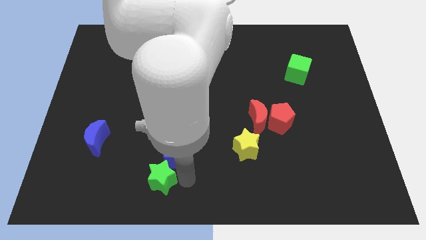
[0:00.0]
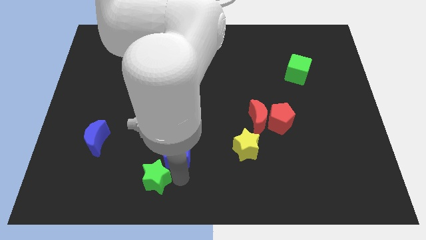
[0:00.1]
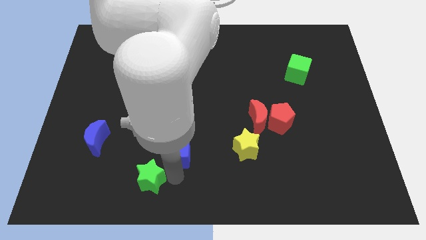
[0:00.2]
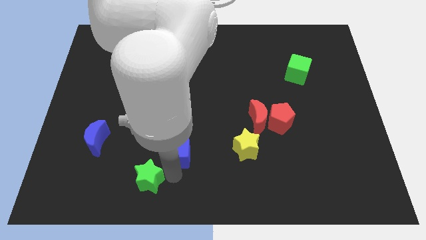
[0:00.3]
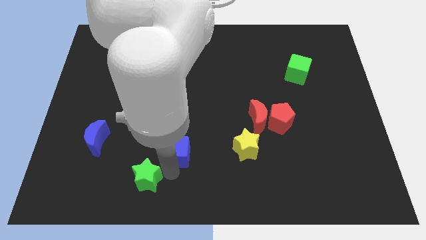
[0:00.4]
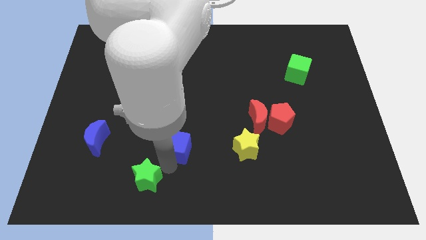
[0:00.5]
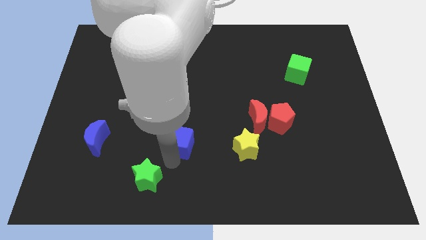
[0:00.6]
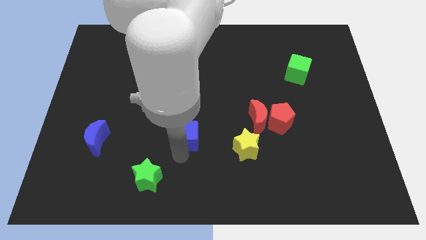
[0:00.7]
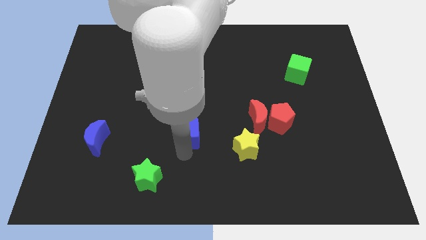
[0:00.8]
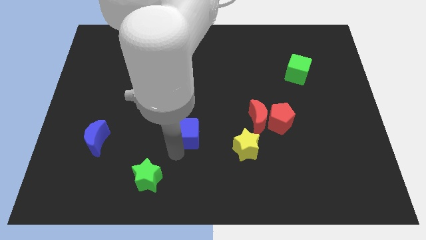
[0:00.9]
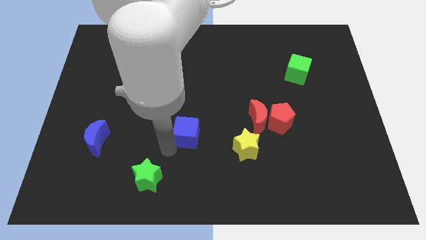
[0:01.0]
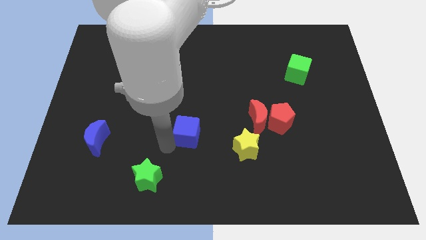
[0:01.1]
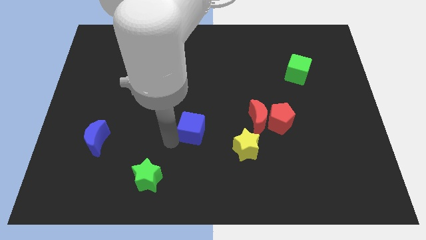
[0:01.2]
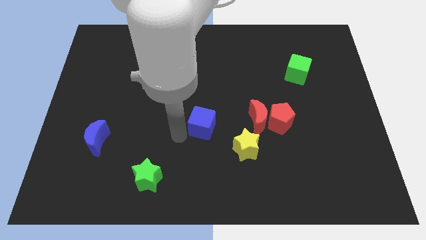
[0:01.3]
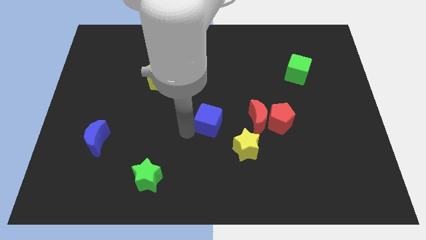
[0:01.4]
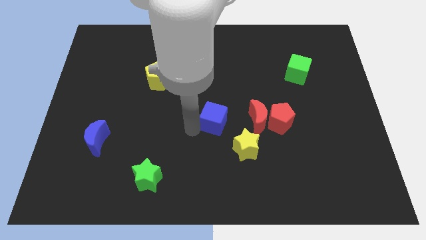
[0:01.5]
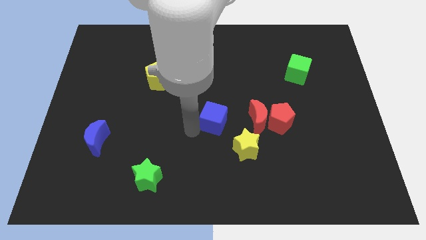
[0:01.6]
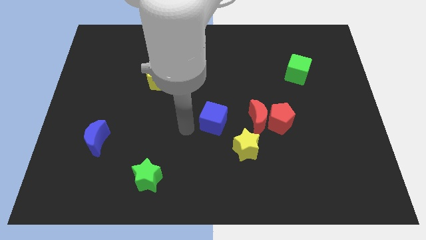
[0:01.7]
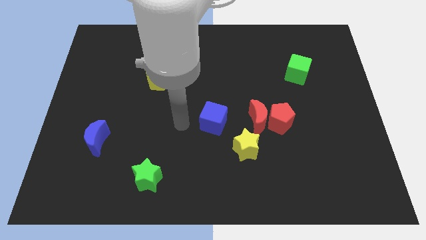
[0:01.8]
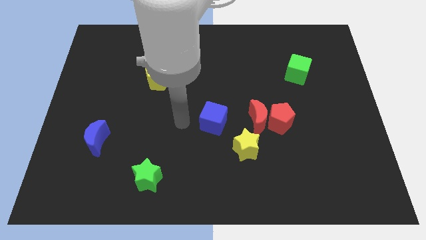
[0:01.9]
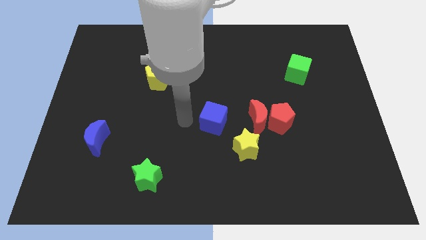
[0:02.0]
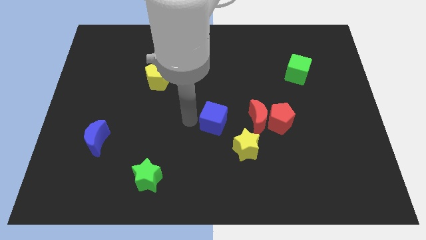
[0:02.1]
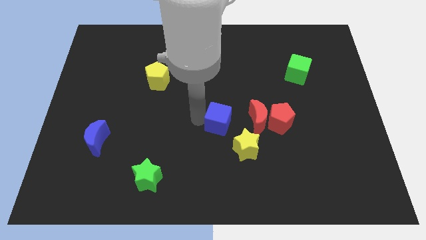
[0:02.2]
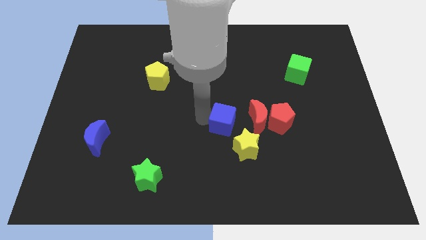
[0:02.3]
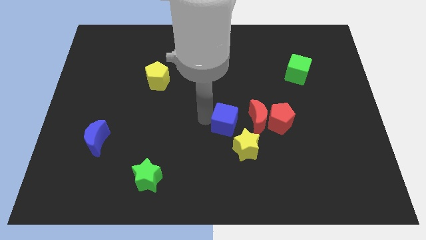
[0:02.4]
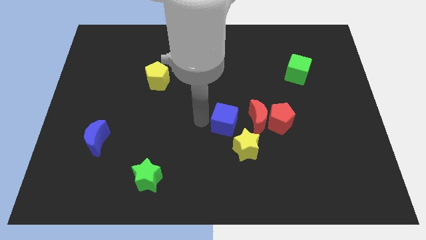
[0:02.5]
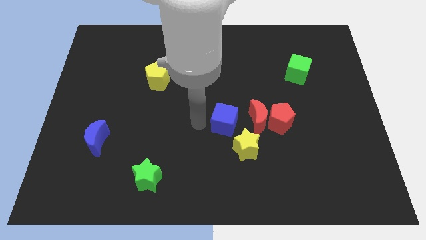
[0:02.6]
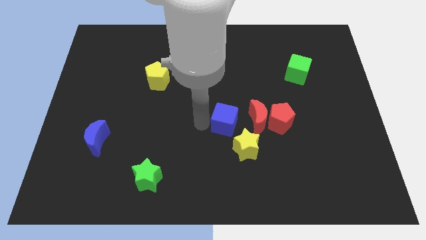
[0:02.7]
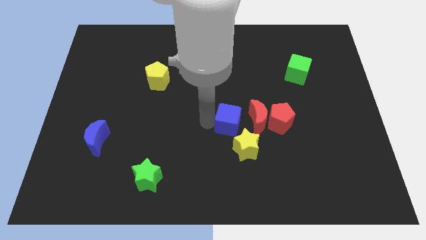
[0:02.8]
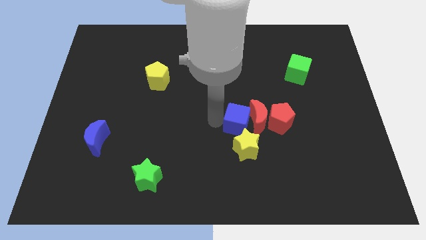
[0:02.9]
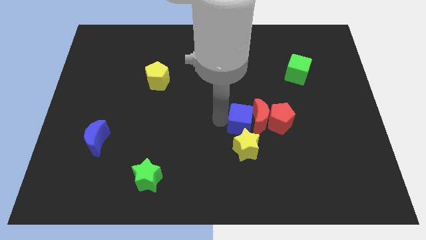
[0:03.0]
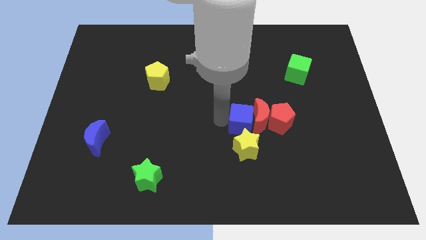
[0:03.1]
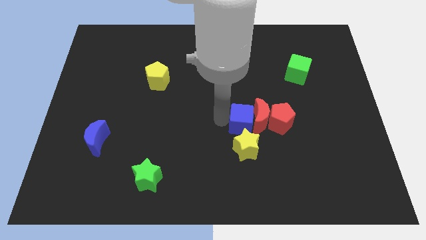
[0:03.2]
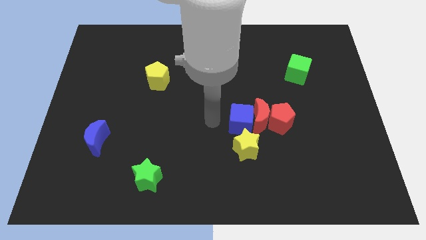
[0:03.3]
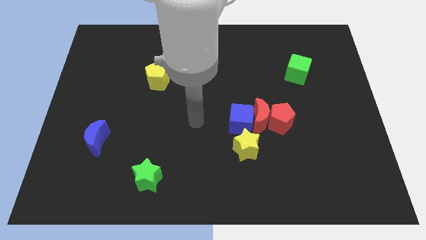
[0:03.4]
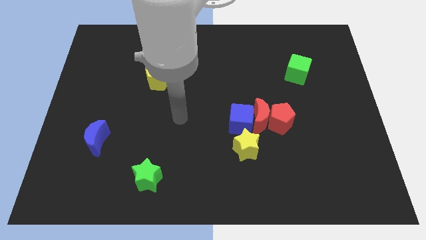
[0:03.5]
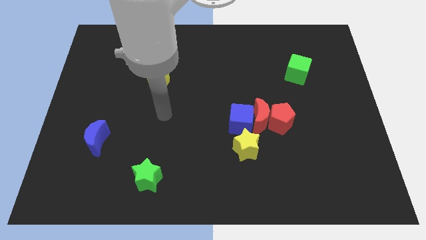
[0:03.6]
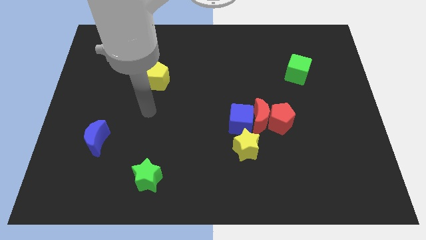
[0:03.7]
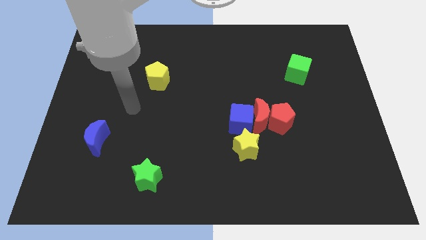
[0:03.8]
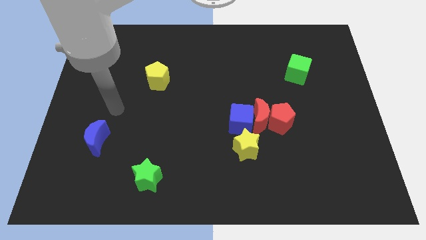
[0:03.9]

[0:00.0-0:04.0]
push the blue cube above to the yellow star

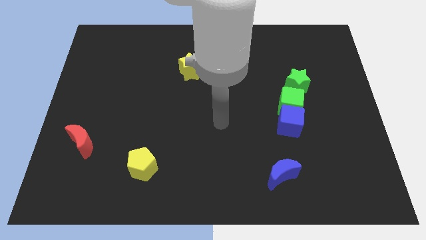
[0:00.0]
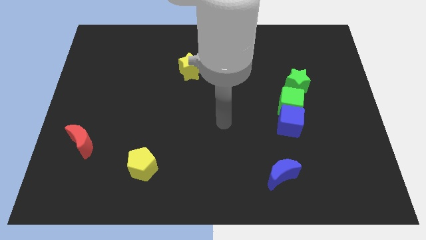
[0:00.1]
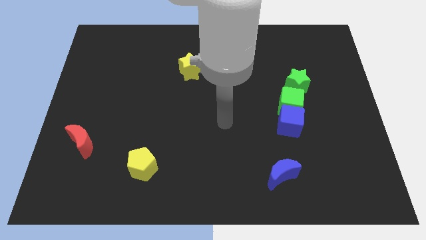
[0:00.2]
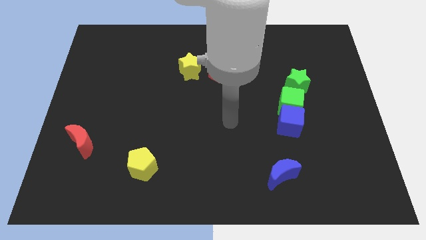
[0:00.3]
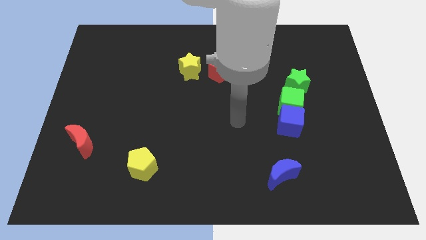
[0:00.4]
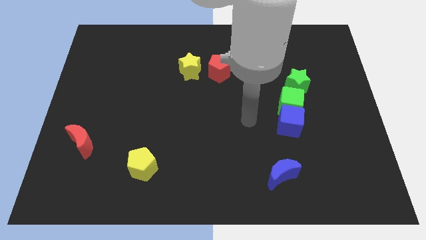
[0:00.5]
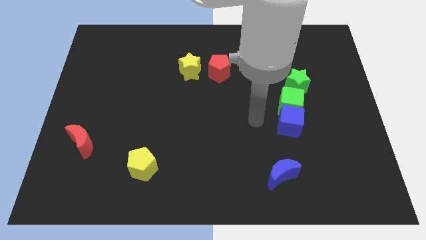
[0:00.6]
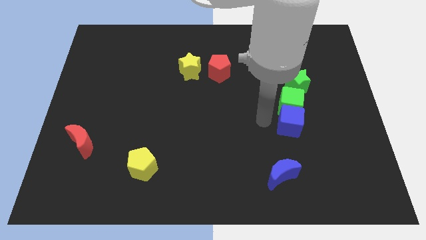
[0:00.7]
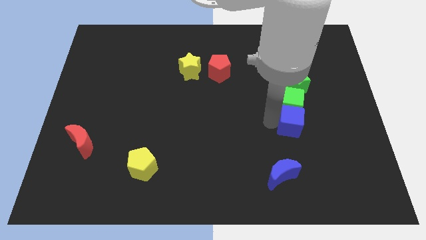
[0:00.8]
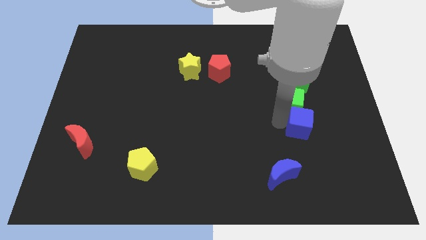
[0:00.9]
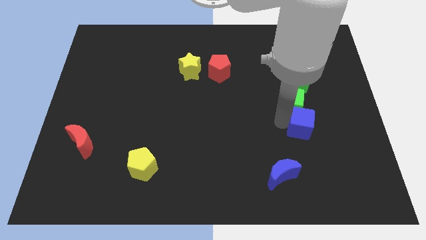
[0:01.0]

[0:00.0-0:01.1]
touch the left side of the blue cube

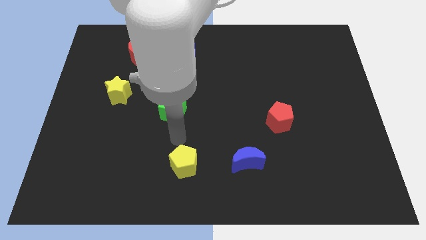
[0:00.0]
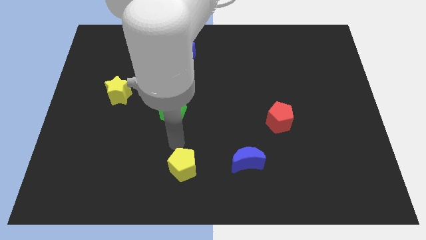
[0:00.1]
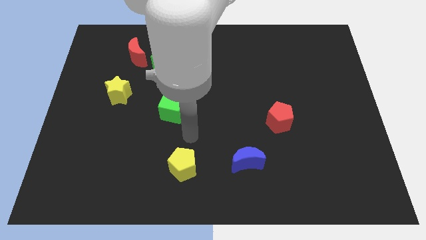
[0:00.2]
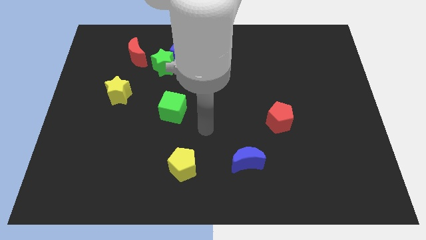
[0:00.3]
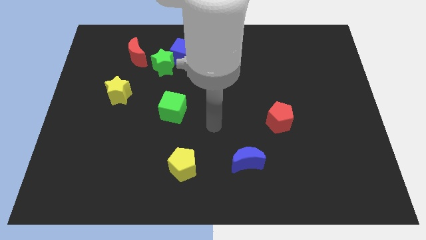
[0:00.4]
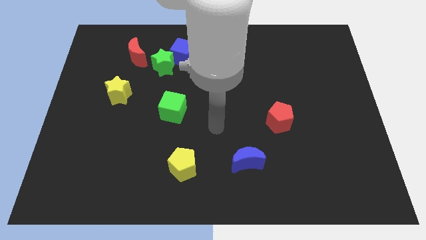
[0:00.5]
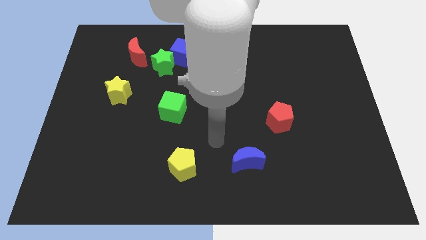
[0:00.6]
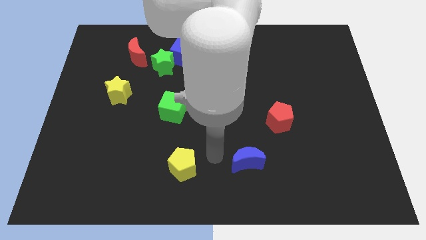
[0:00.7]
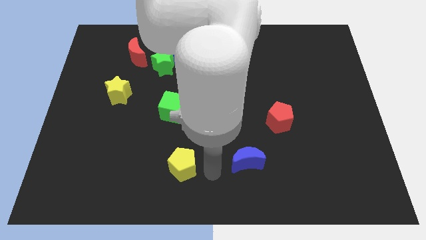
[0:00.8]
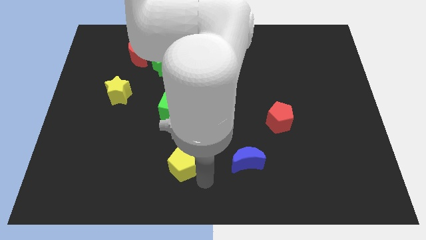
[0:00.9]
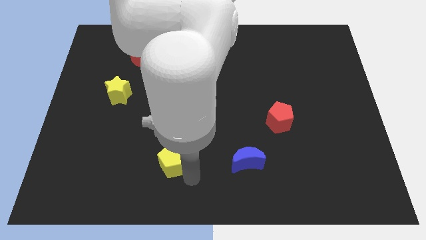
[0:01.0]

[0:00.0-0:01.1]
place yellow pentagon vertically below green cube

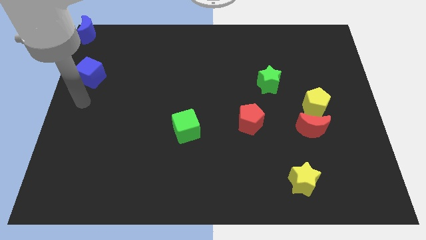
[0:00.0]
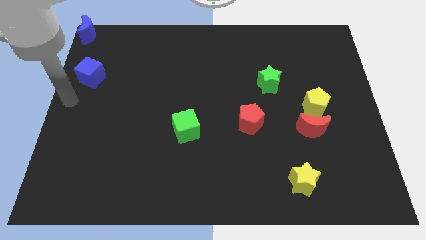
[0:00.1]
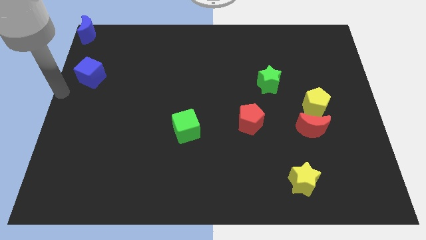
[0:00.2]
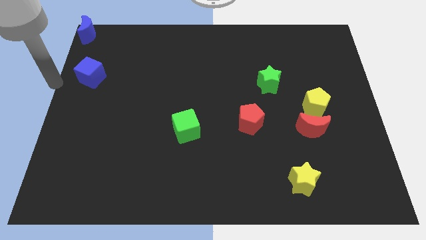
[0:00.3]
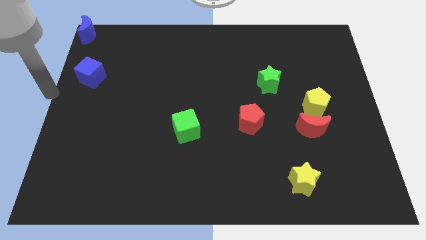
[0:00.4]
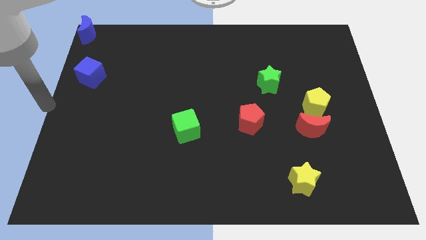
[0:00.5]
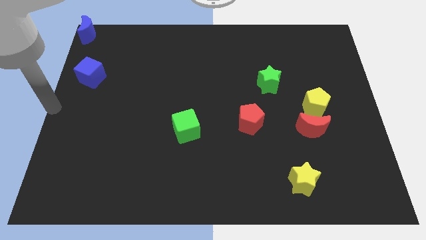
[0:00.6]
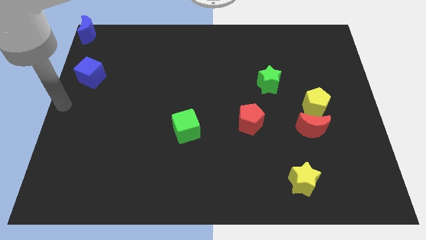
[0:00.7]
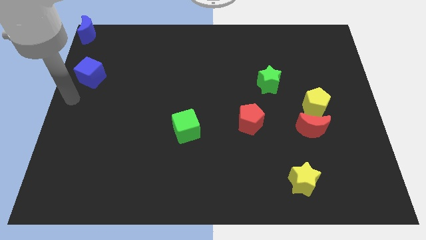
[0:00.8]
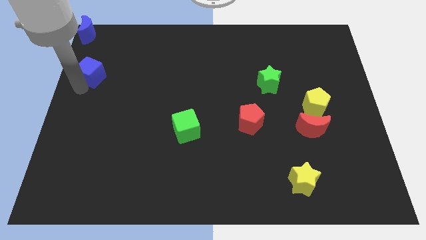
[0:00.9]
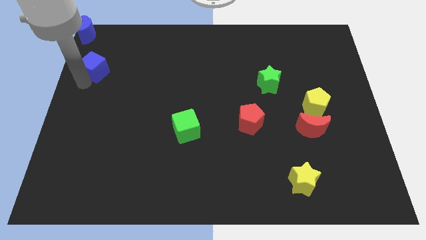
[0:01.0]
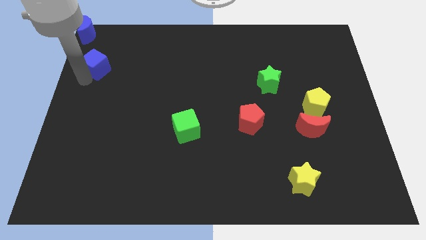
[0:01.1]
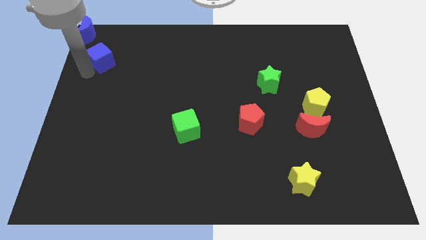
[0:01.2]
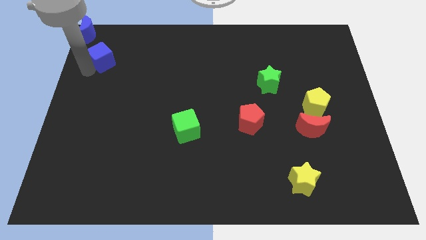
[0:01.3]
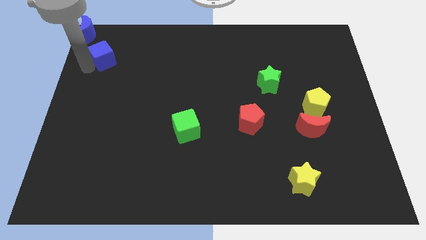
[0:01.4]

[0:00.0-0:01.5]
slide the blue cube towards the blue moon

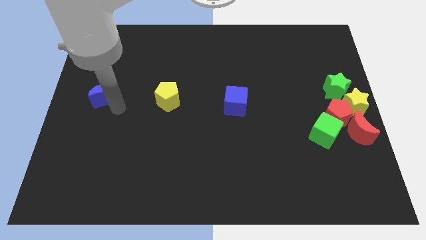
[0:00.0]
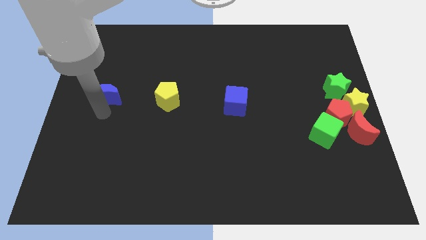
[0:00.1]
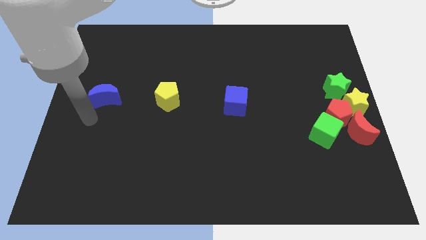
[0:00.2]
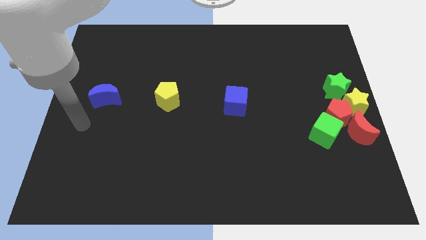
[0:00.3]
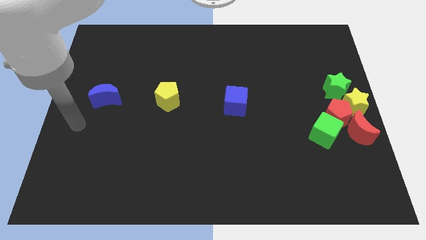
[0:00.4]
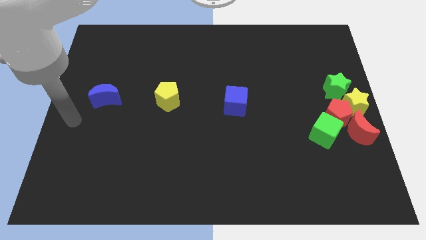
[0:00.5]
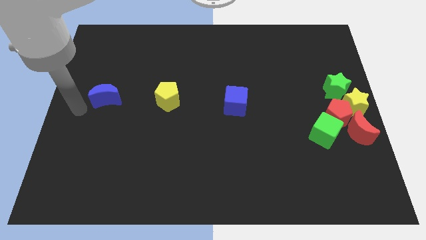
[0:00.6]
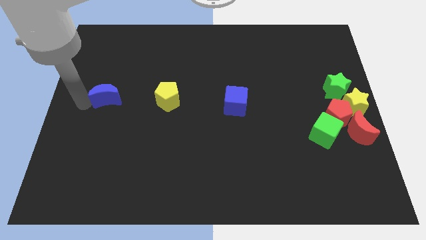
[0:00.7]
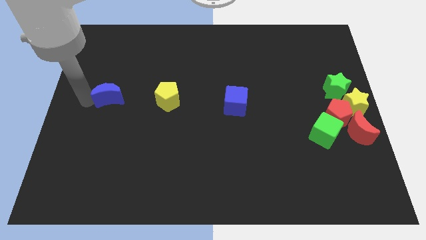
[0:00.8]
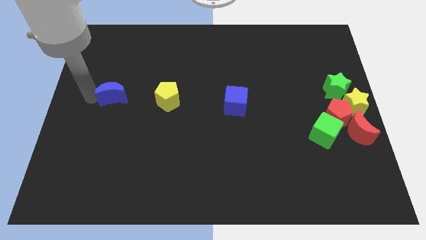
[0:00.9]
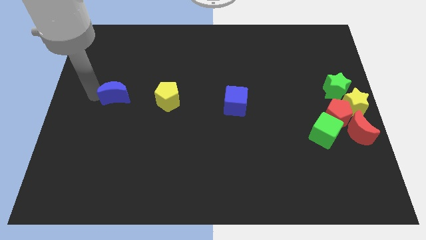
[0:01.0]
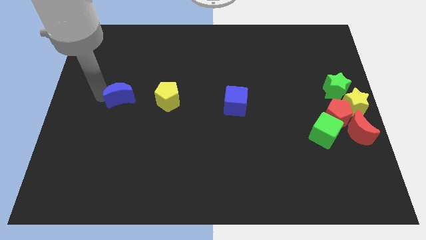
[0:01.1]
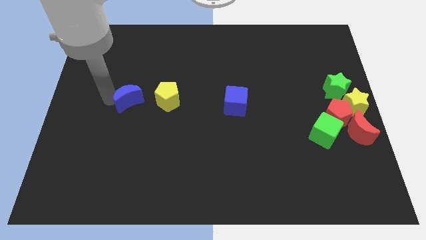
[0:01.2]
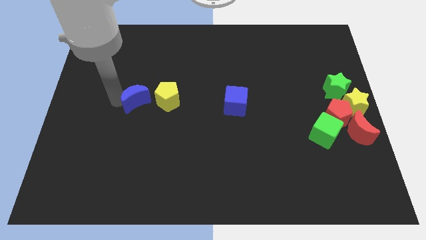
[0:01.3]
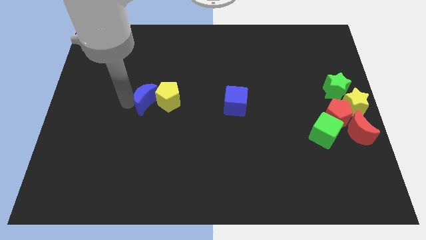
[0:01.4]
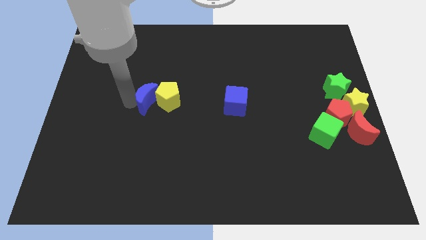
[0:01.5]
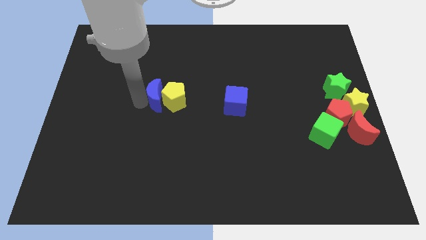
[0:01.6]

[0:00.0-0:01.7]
move the blue moon into the yellow pentagon
